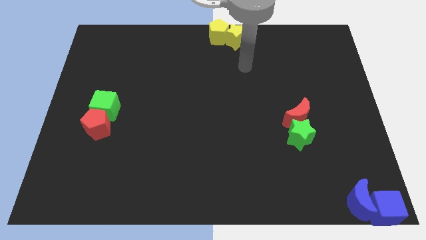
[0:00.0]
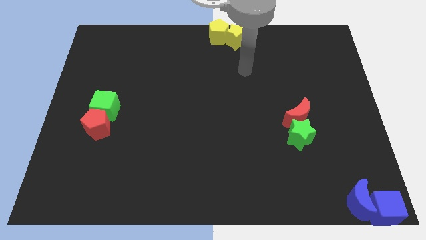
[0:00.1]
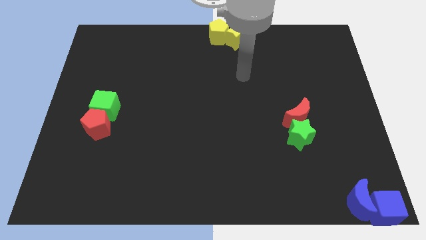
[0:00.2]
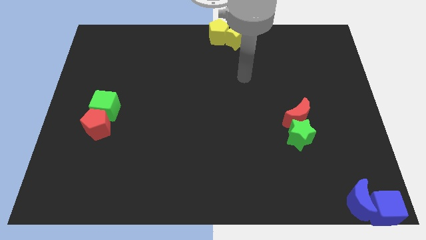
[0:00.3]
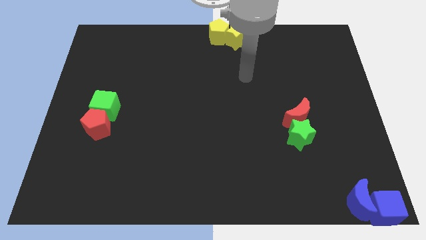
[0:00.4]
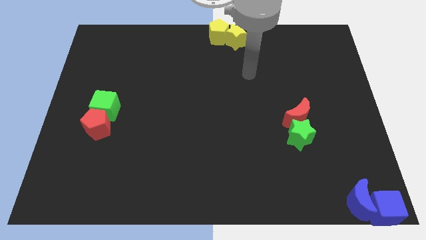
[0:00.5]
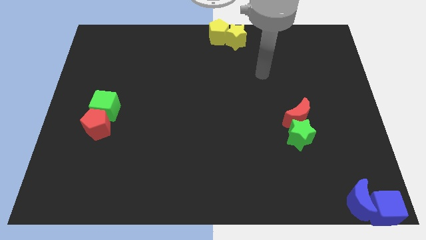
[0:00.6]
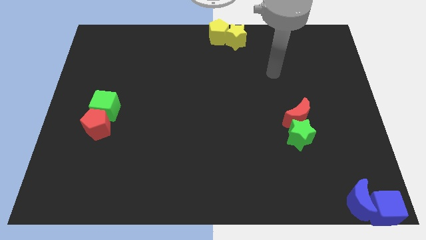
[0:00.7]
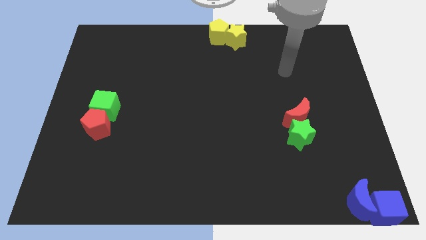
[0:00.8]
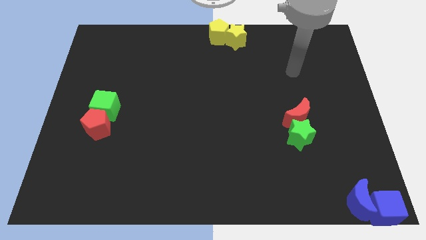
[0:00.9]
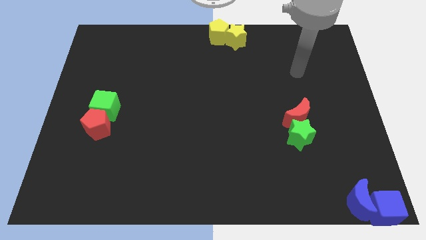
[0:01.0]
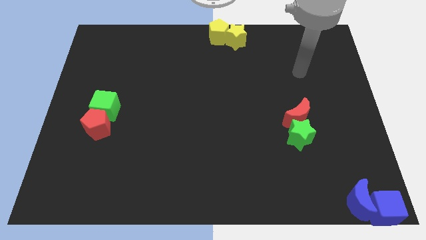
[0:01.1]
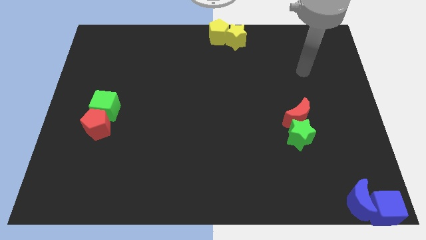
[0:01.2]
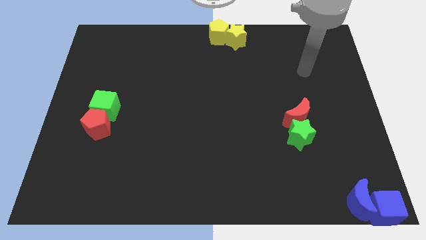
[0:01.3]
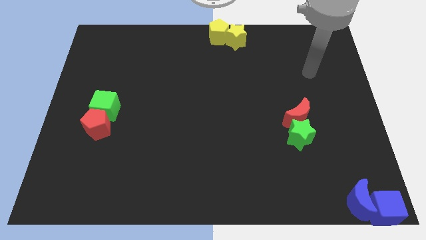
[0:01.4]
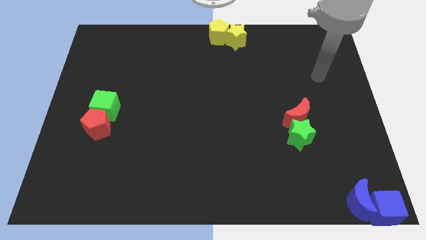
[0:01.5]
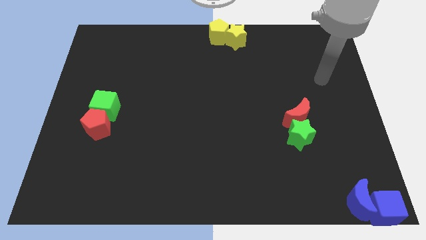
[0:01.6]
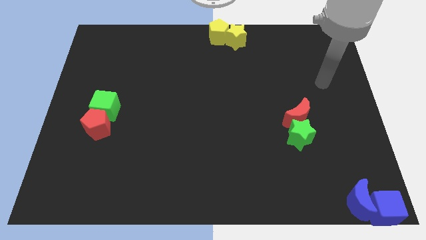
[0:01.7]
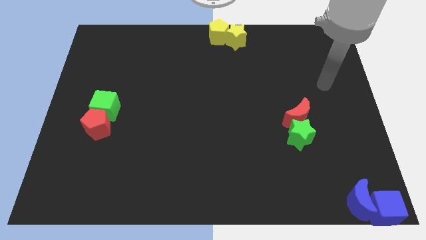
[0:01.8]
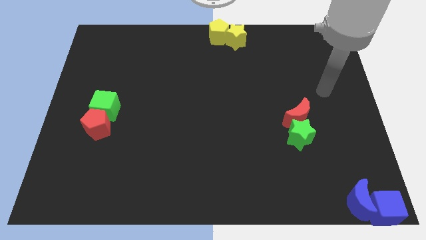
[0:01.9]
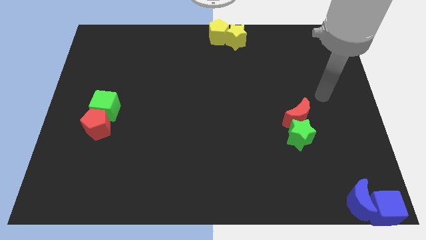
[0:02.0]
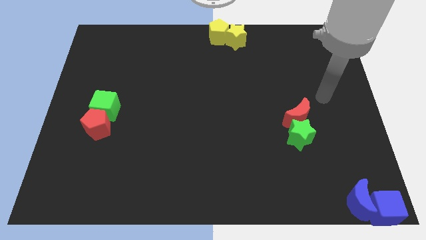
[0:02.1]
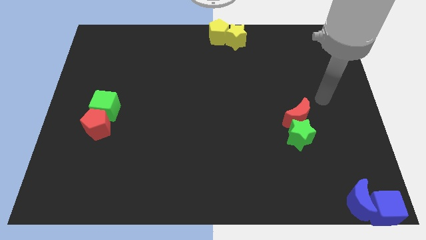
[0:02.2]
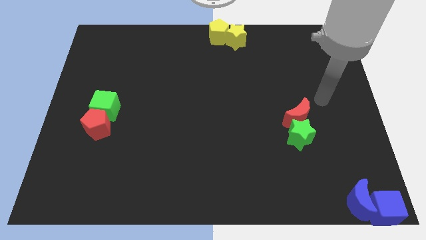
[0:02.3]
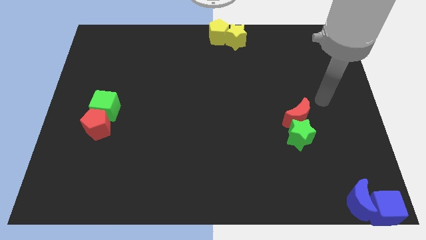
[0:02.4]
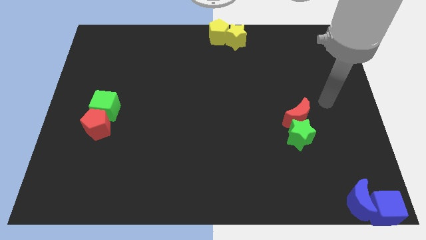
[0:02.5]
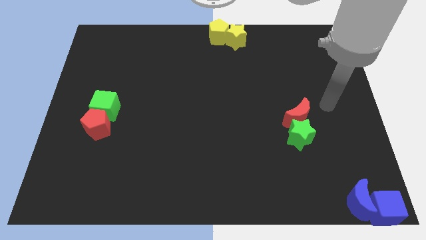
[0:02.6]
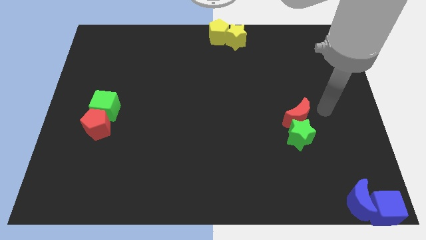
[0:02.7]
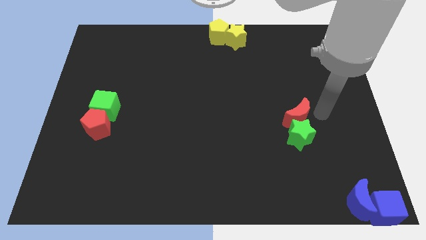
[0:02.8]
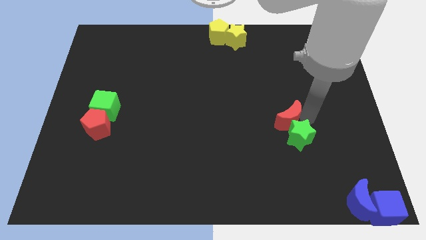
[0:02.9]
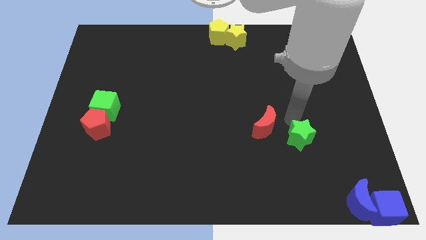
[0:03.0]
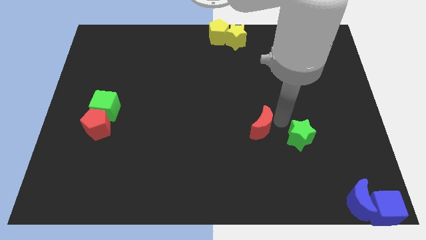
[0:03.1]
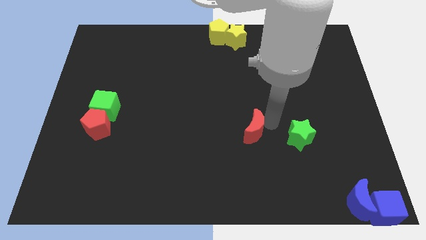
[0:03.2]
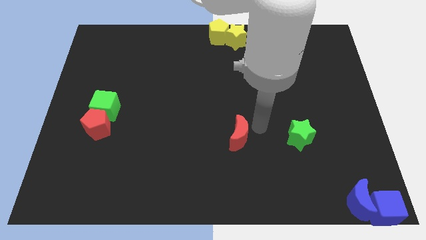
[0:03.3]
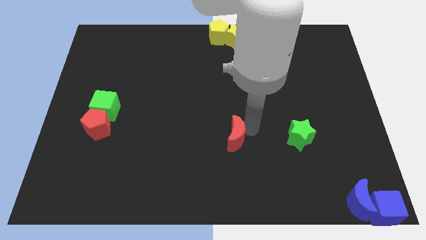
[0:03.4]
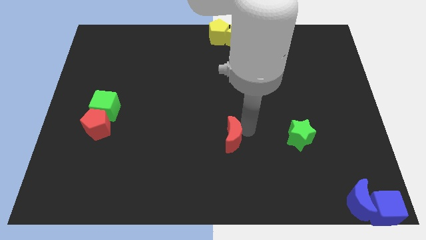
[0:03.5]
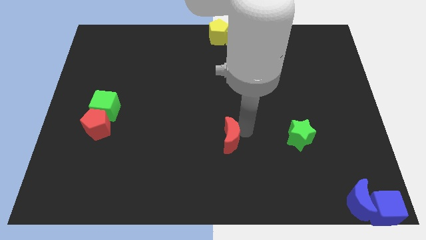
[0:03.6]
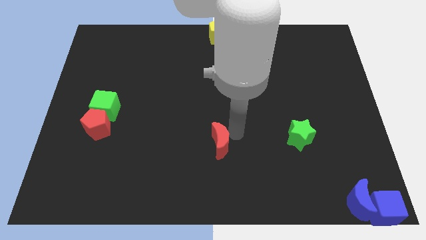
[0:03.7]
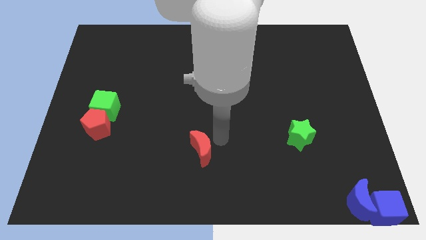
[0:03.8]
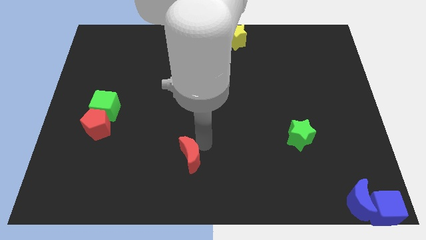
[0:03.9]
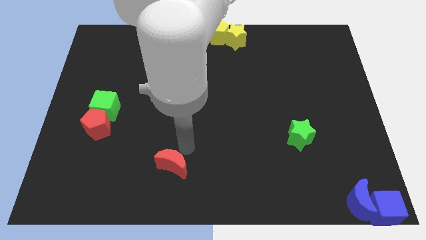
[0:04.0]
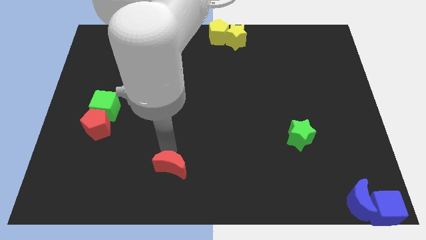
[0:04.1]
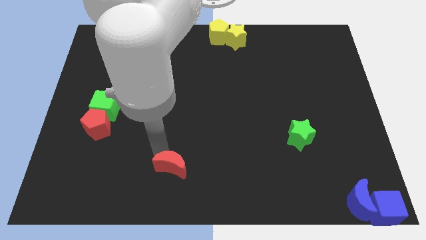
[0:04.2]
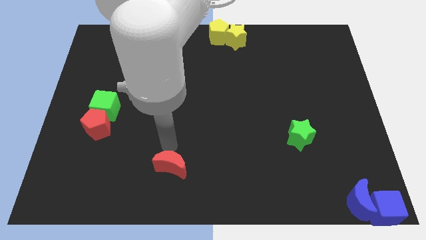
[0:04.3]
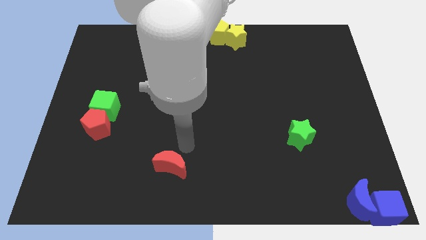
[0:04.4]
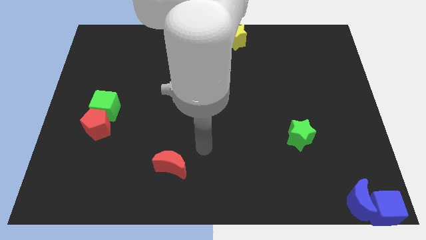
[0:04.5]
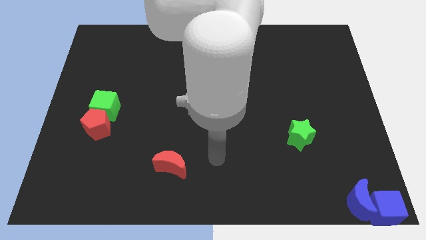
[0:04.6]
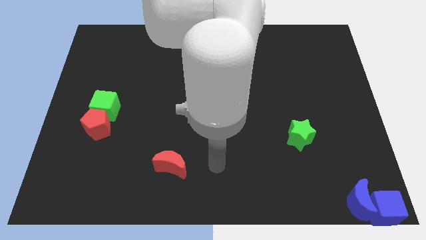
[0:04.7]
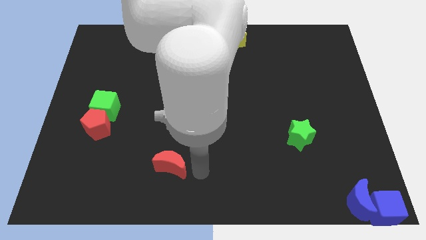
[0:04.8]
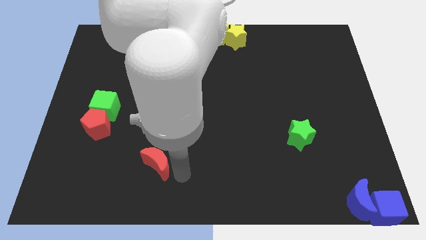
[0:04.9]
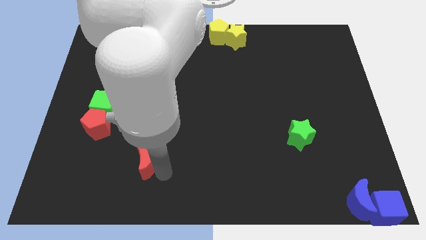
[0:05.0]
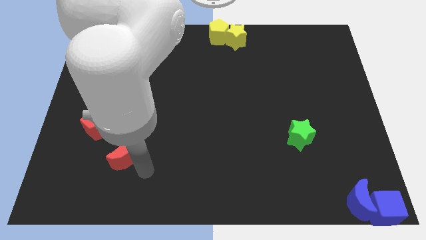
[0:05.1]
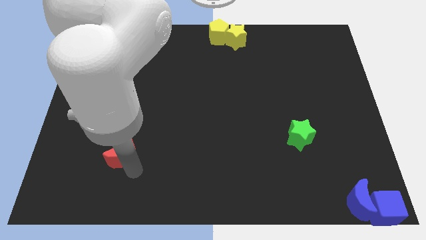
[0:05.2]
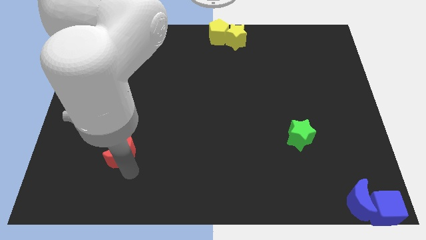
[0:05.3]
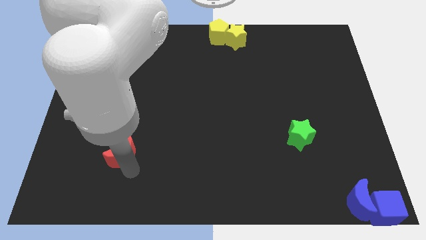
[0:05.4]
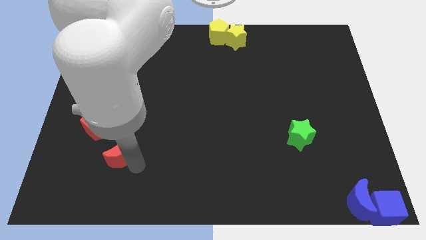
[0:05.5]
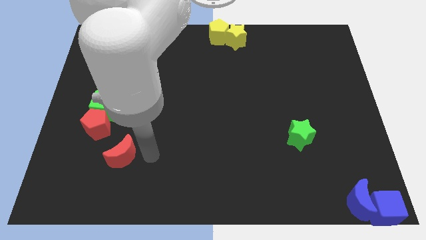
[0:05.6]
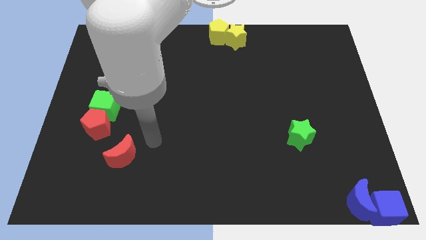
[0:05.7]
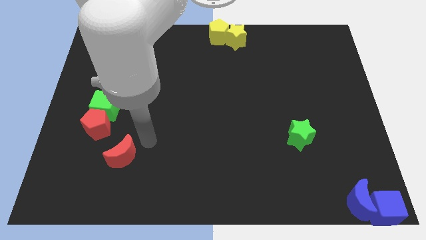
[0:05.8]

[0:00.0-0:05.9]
move the red moon diagonally towards the bottom left side of the board

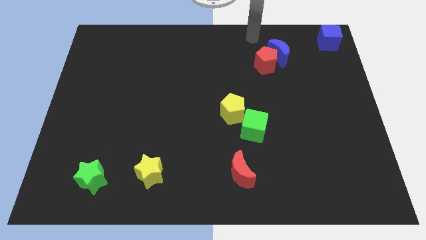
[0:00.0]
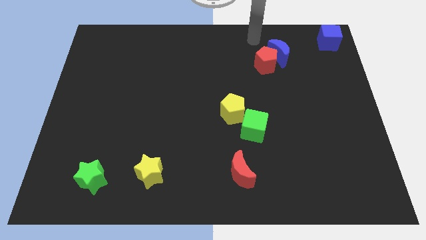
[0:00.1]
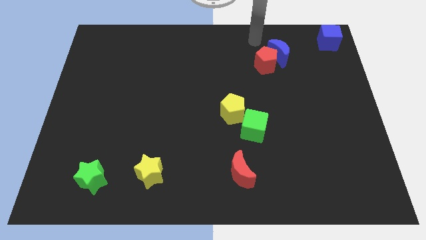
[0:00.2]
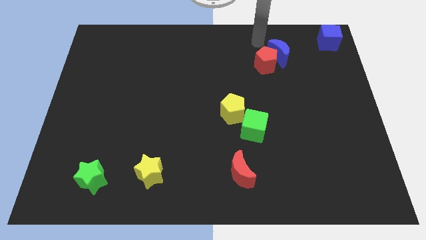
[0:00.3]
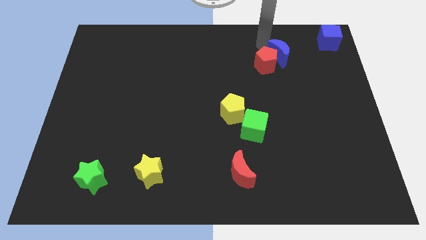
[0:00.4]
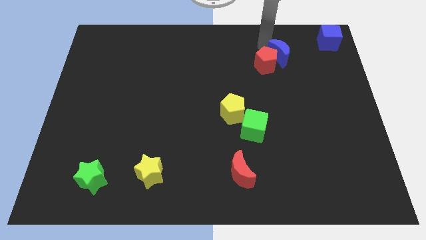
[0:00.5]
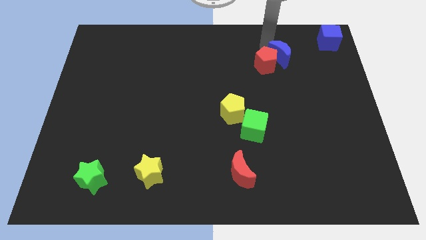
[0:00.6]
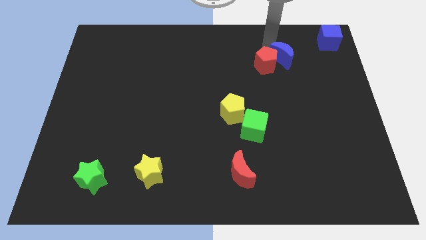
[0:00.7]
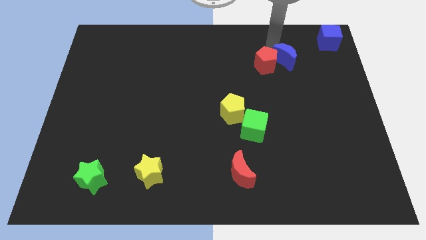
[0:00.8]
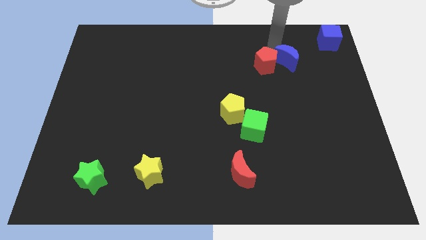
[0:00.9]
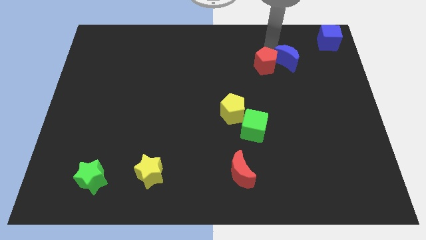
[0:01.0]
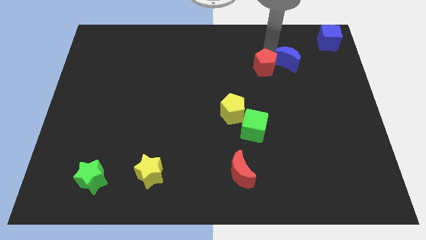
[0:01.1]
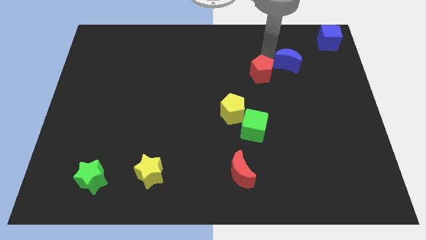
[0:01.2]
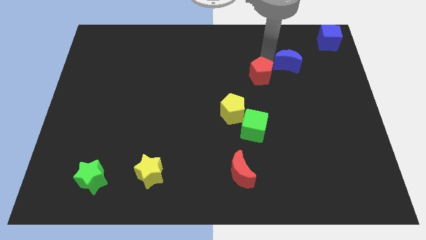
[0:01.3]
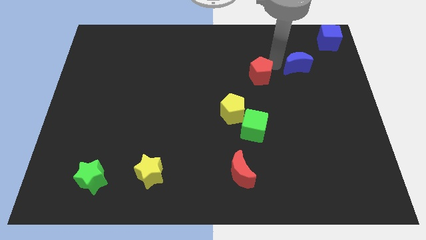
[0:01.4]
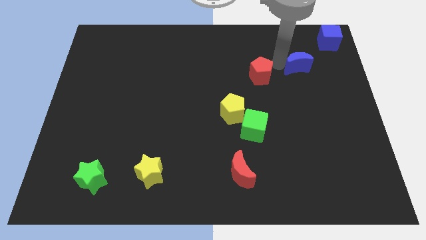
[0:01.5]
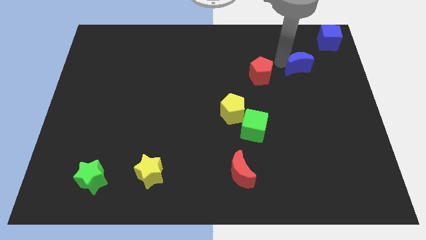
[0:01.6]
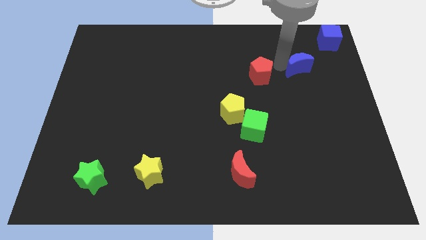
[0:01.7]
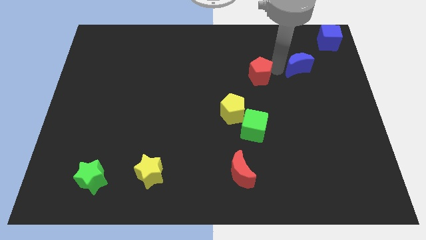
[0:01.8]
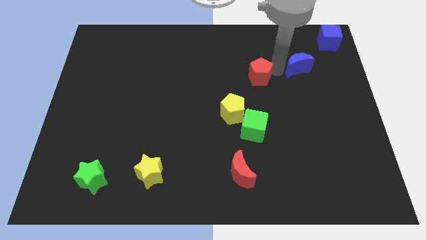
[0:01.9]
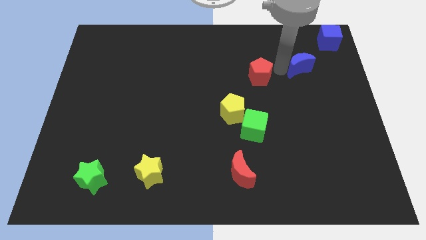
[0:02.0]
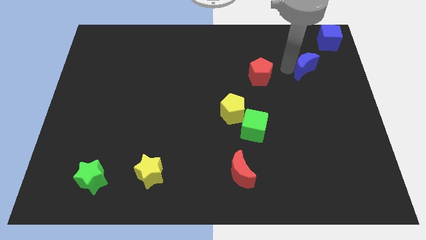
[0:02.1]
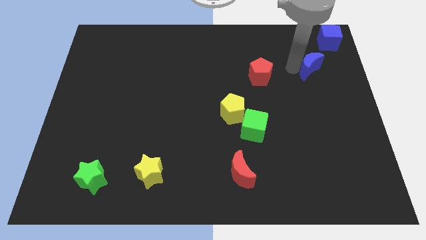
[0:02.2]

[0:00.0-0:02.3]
separate the blue moon from the red pentagon

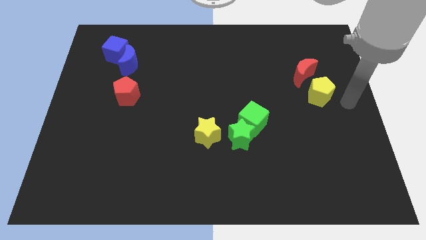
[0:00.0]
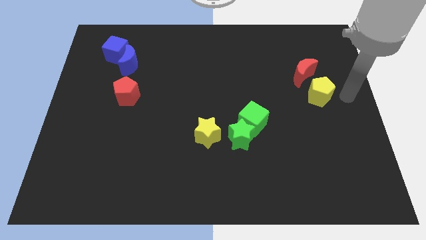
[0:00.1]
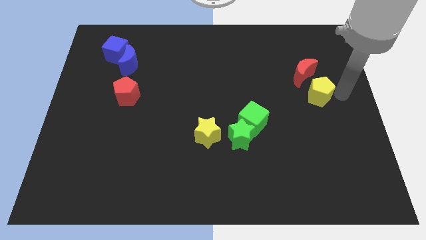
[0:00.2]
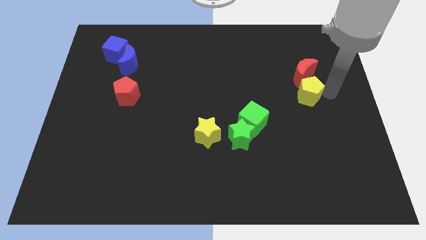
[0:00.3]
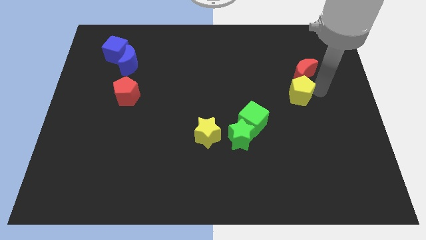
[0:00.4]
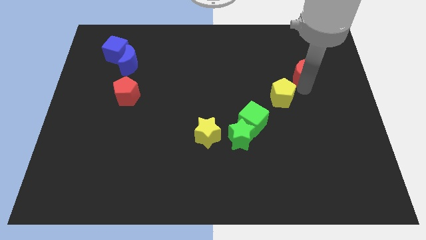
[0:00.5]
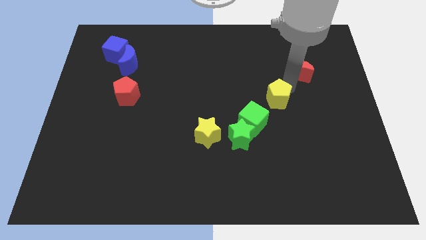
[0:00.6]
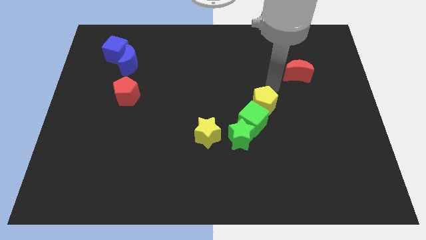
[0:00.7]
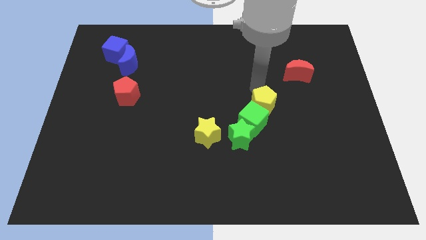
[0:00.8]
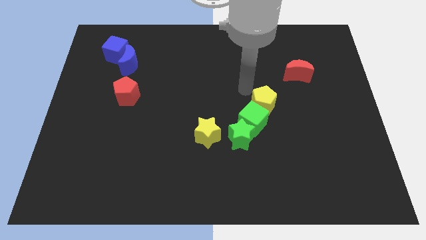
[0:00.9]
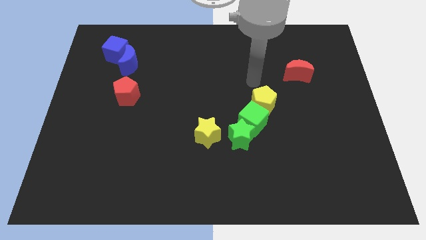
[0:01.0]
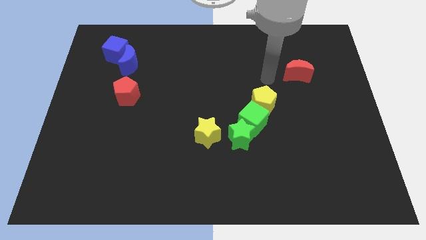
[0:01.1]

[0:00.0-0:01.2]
move the yellow pentagon above to the green cube
